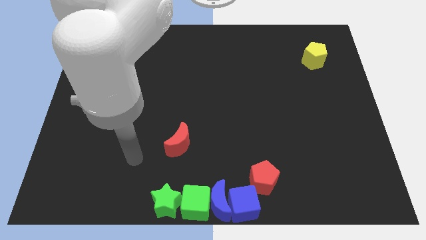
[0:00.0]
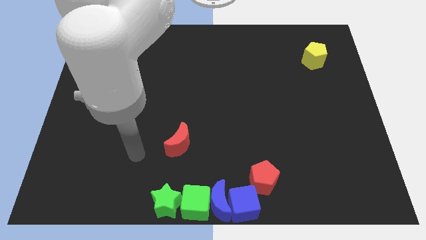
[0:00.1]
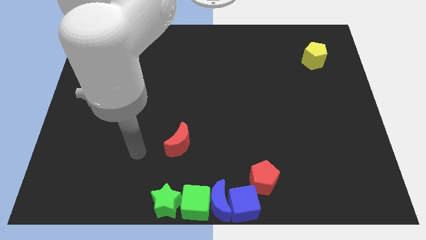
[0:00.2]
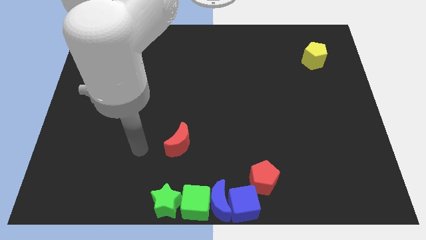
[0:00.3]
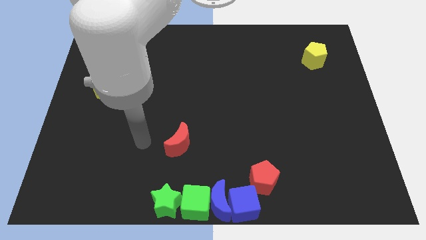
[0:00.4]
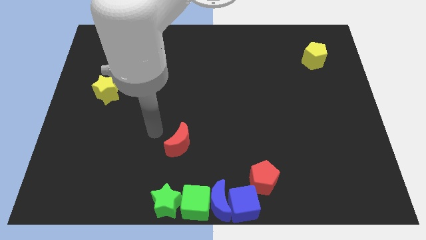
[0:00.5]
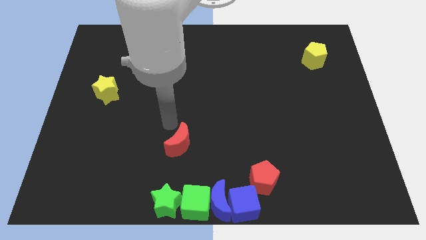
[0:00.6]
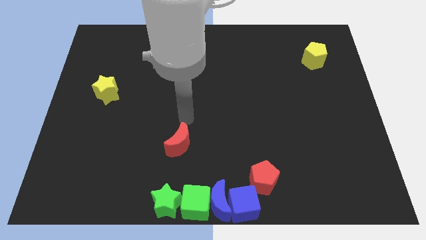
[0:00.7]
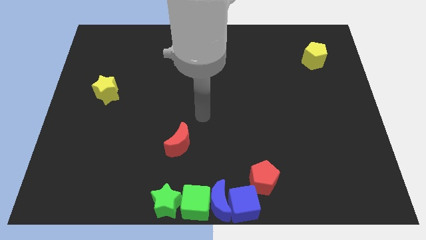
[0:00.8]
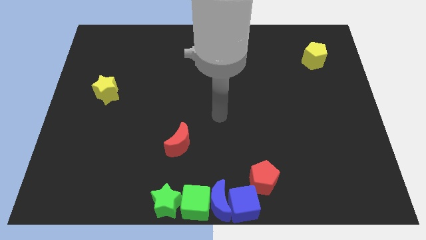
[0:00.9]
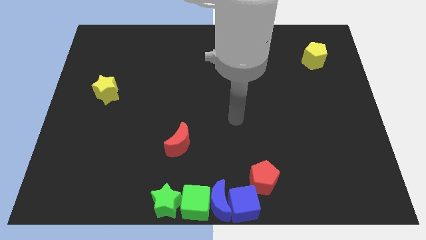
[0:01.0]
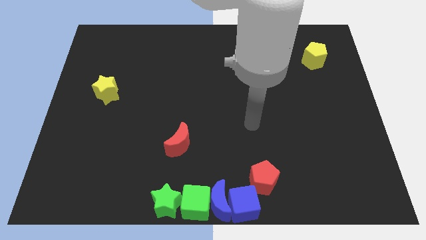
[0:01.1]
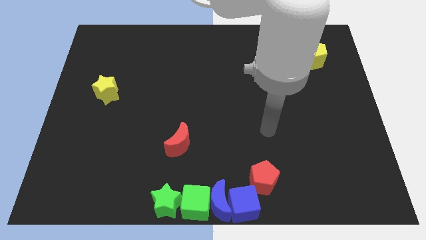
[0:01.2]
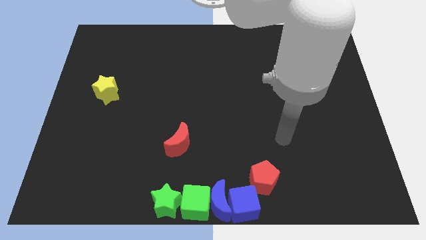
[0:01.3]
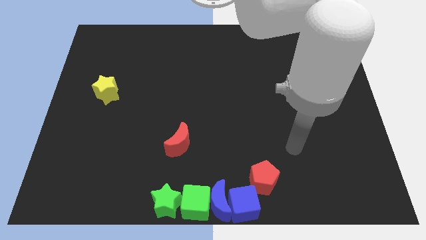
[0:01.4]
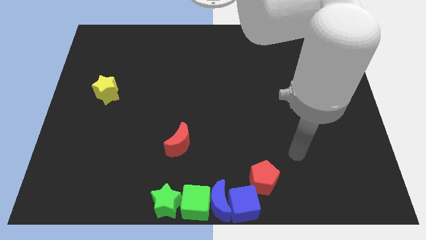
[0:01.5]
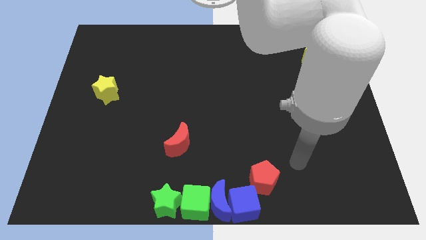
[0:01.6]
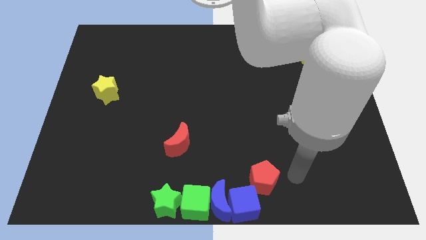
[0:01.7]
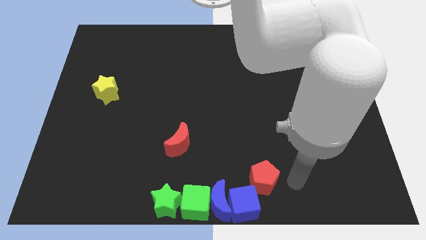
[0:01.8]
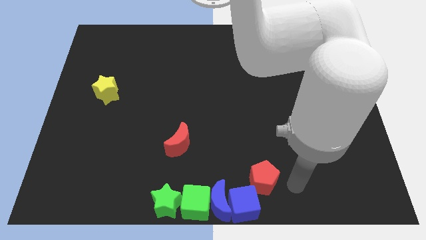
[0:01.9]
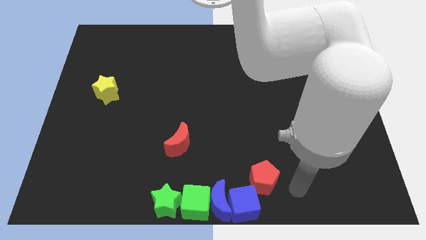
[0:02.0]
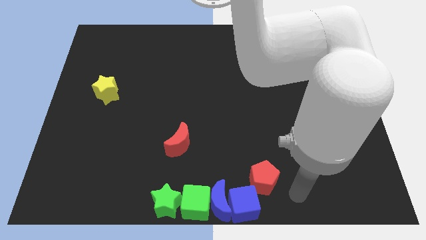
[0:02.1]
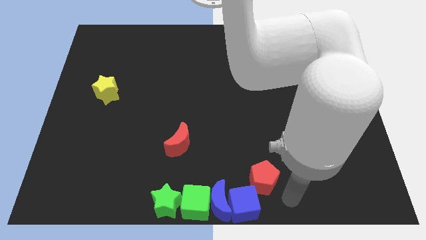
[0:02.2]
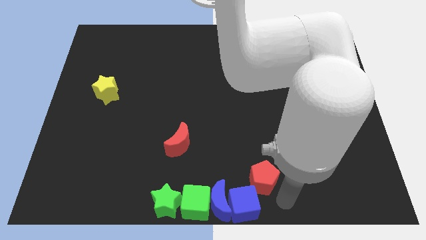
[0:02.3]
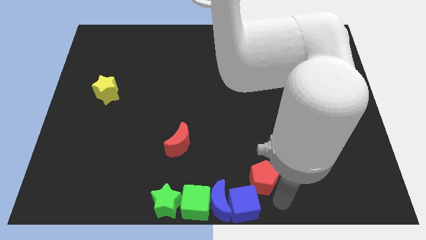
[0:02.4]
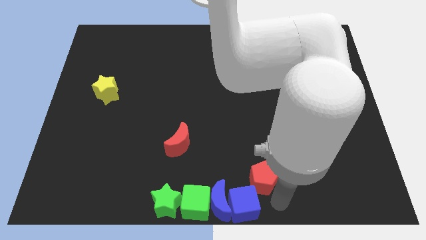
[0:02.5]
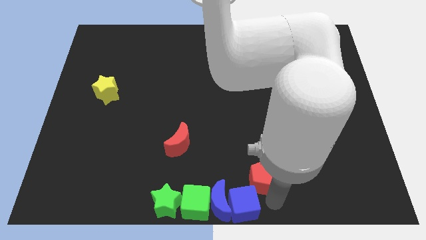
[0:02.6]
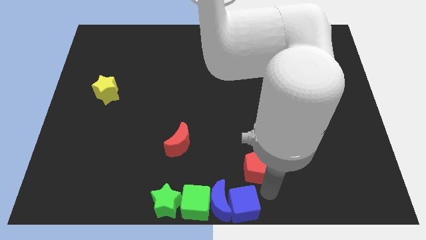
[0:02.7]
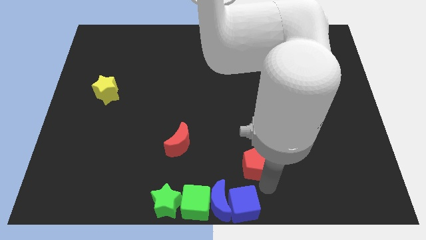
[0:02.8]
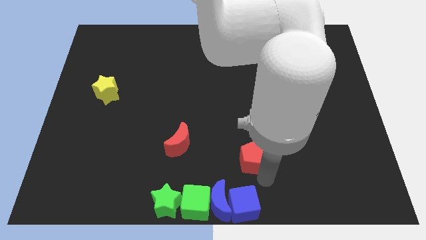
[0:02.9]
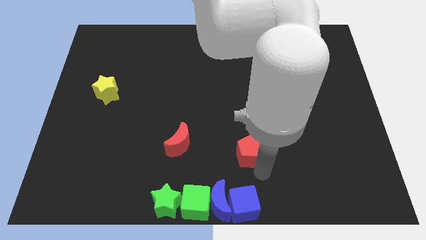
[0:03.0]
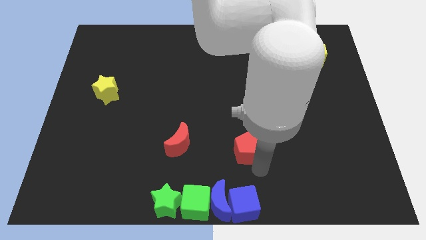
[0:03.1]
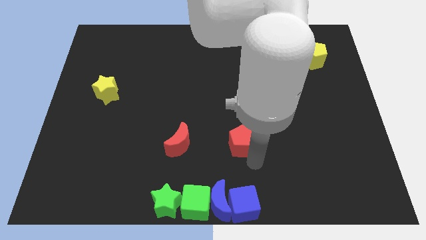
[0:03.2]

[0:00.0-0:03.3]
place the red pentagon horizontal to the red crescent

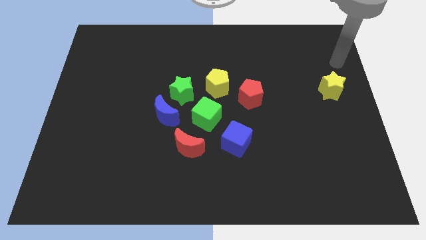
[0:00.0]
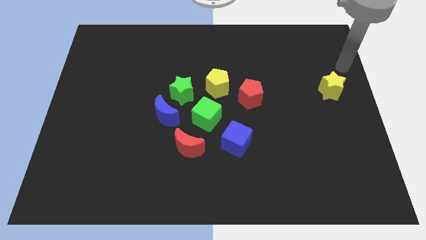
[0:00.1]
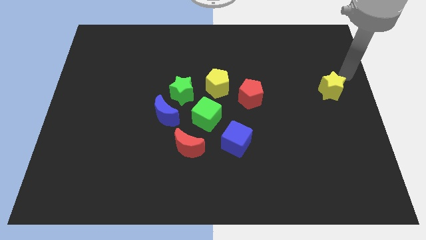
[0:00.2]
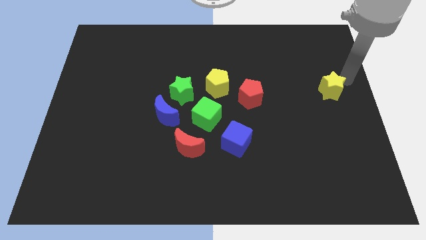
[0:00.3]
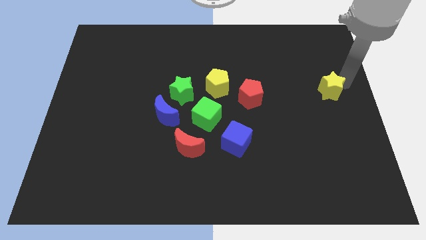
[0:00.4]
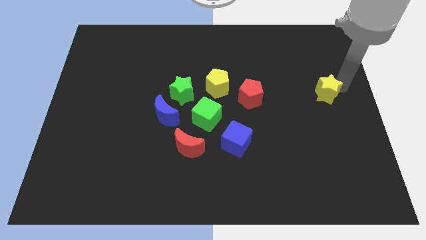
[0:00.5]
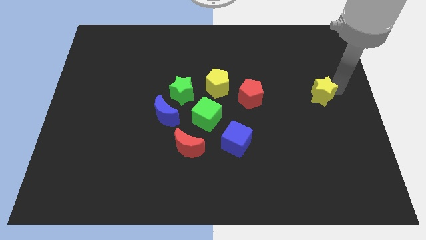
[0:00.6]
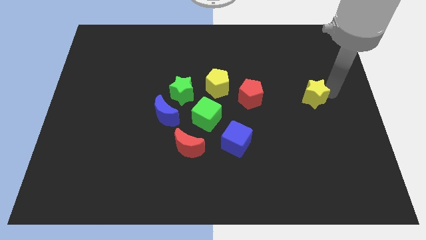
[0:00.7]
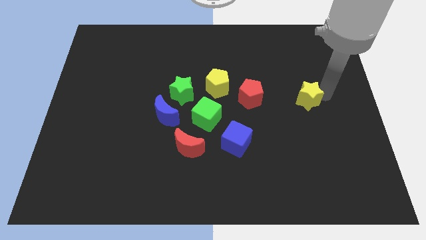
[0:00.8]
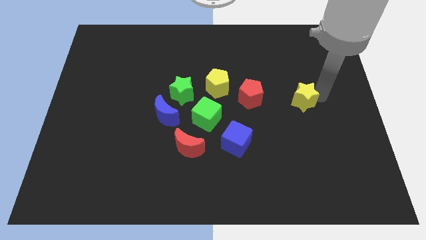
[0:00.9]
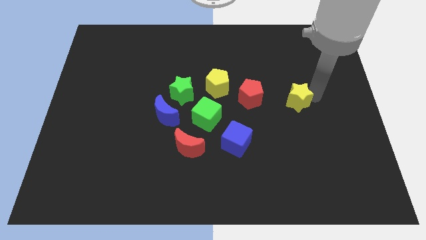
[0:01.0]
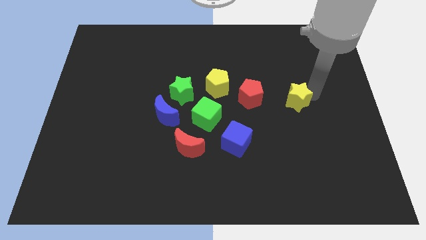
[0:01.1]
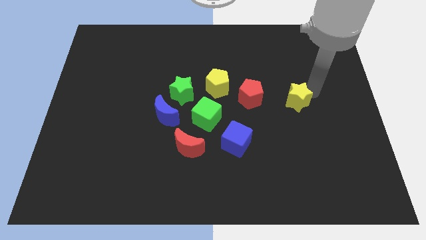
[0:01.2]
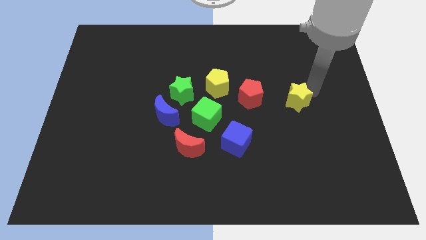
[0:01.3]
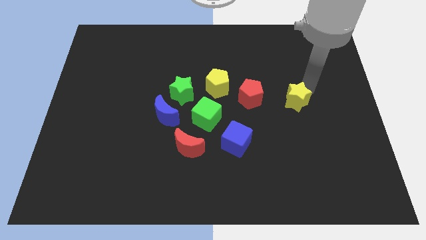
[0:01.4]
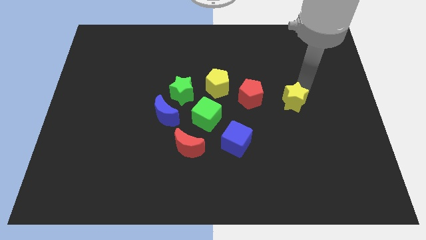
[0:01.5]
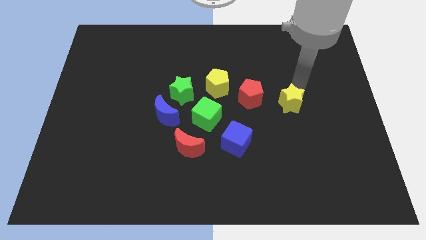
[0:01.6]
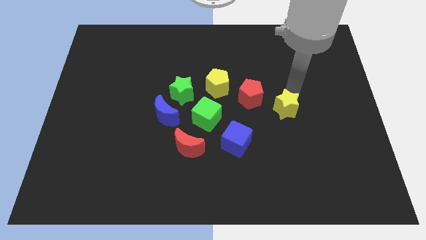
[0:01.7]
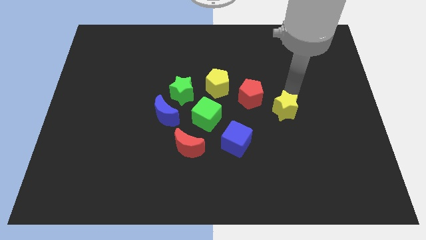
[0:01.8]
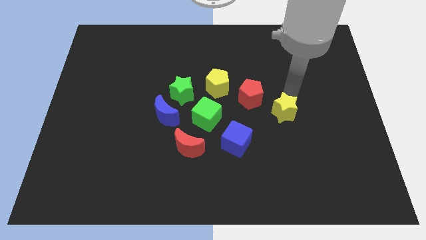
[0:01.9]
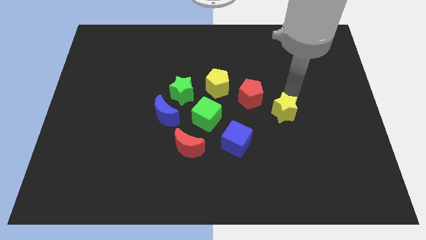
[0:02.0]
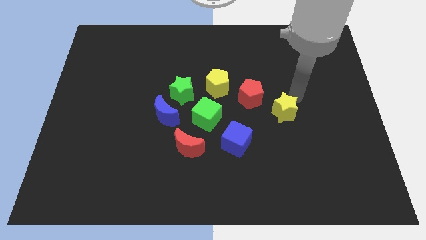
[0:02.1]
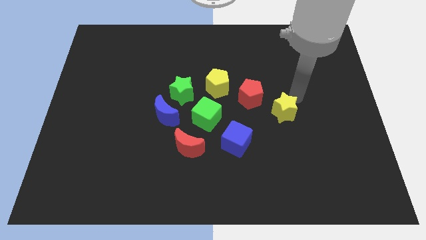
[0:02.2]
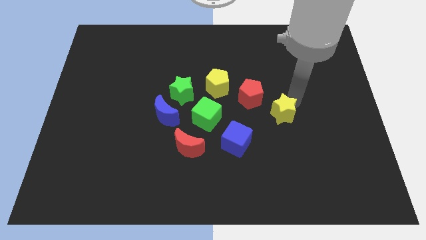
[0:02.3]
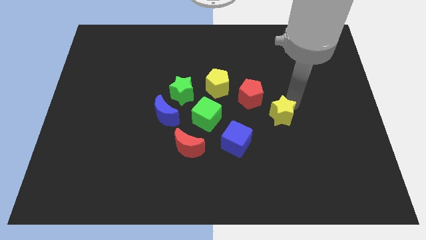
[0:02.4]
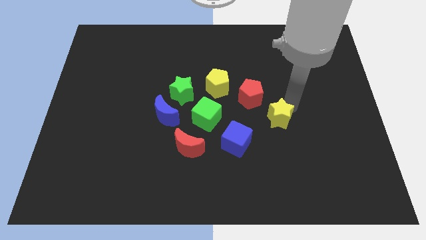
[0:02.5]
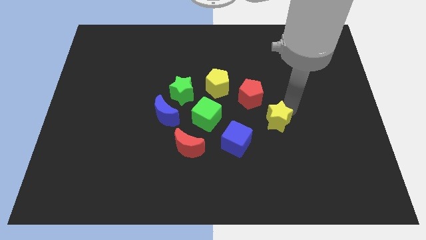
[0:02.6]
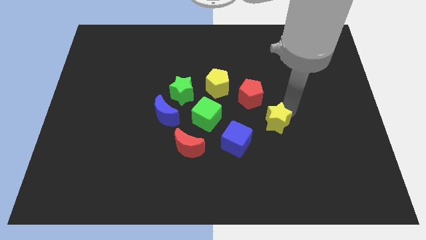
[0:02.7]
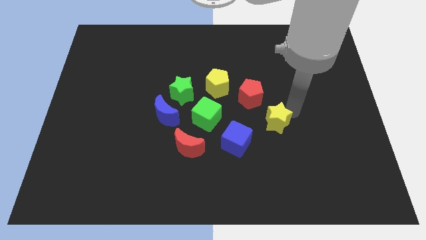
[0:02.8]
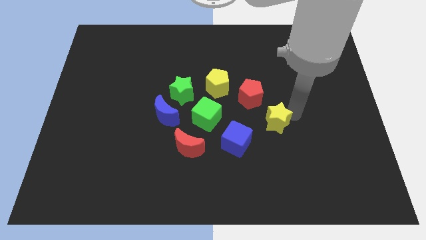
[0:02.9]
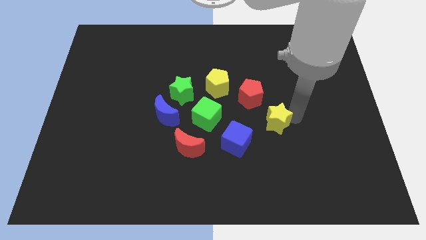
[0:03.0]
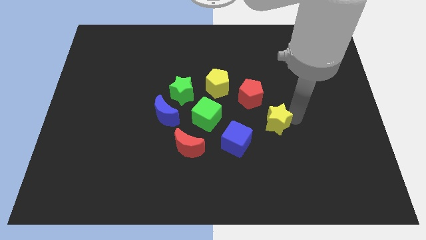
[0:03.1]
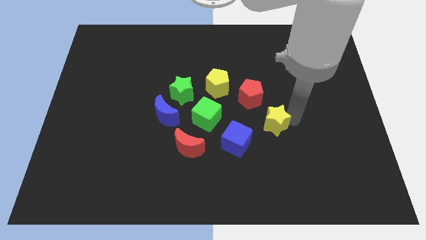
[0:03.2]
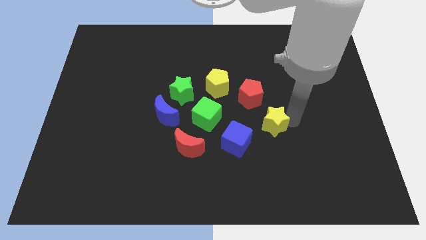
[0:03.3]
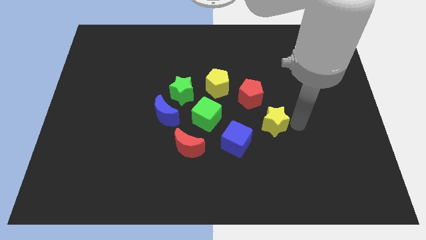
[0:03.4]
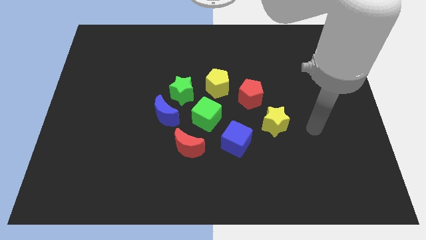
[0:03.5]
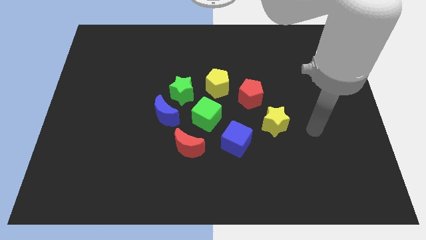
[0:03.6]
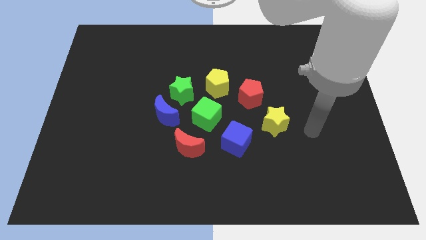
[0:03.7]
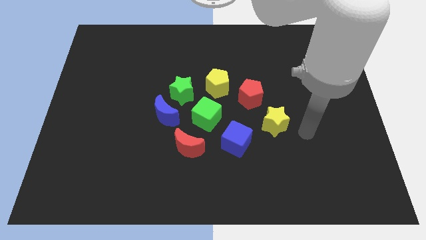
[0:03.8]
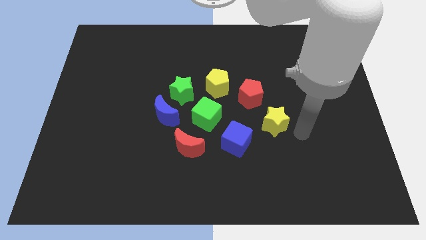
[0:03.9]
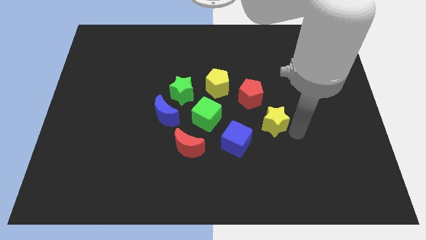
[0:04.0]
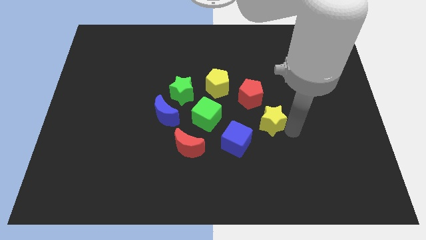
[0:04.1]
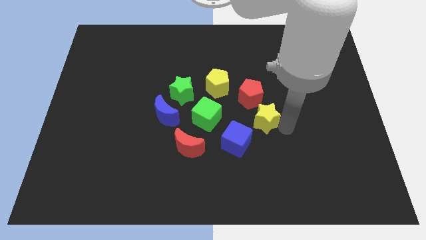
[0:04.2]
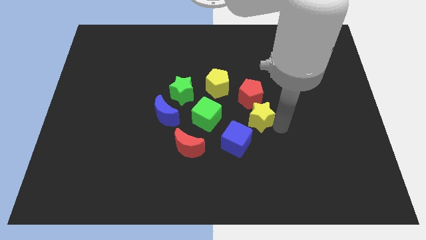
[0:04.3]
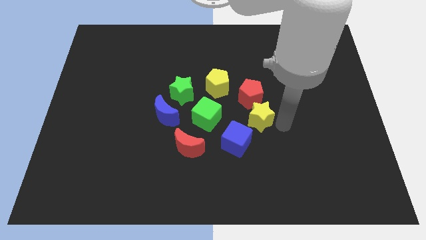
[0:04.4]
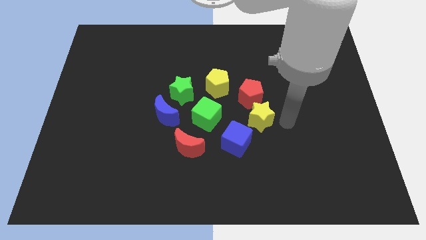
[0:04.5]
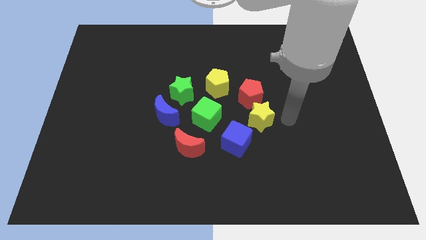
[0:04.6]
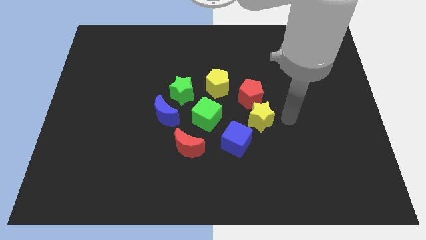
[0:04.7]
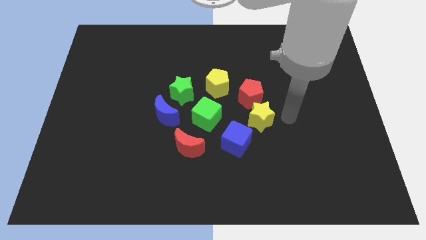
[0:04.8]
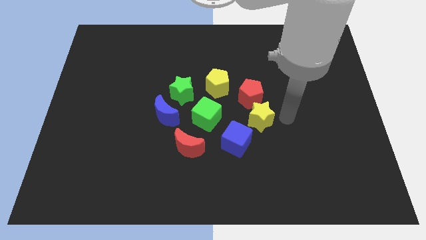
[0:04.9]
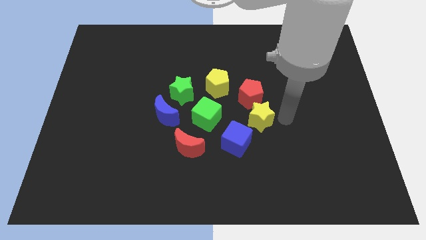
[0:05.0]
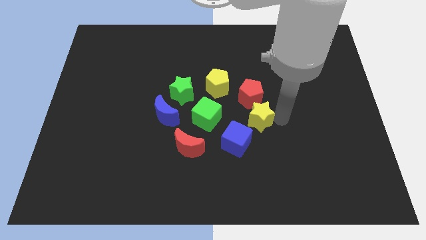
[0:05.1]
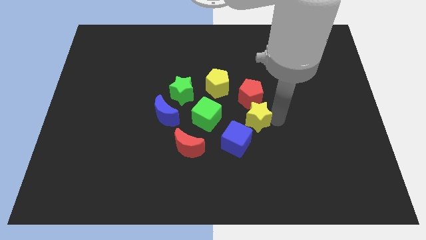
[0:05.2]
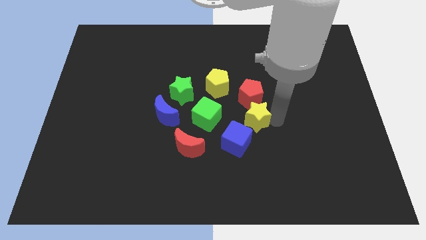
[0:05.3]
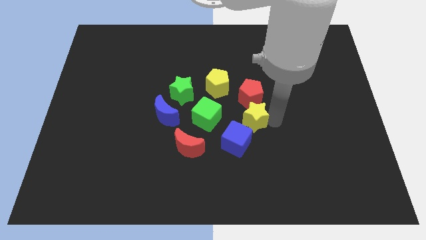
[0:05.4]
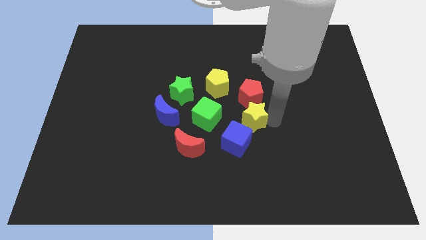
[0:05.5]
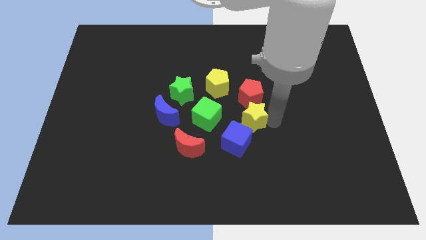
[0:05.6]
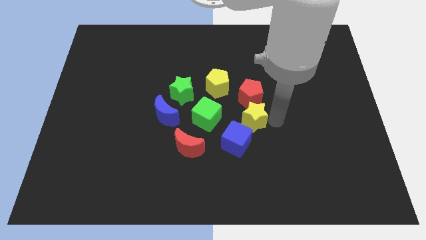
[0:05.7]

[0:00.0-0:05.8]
push the yellow star horizontally right to the green cube
